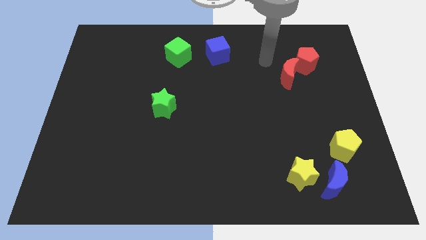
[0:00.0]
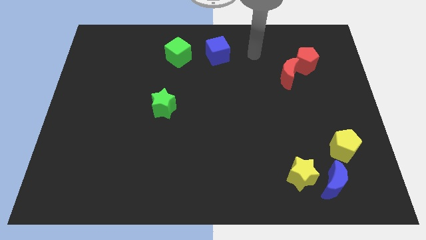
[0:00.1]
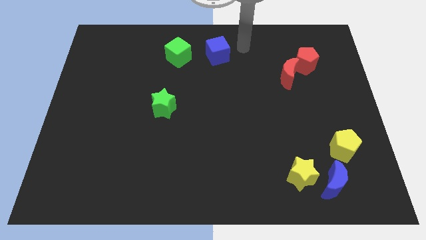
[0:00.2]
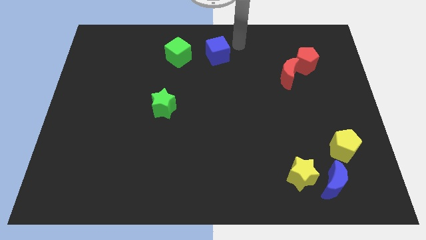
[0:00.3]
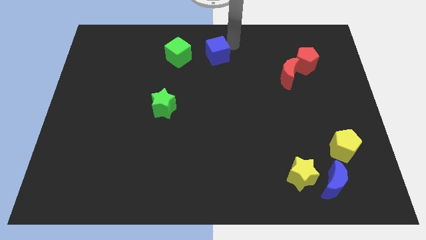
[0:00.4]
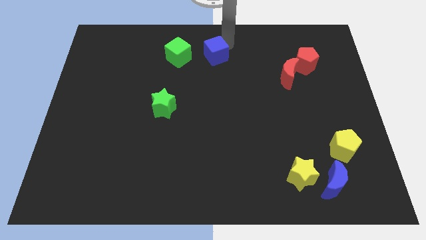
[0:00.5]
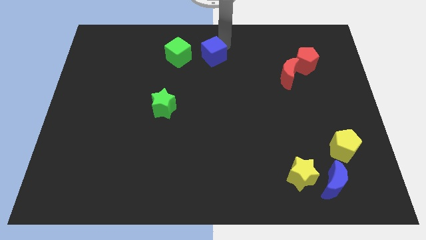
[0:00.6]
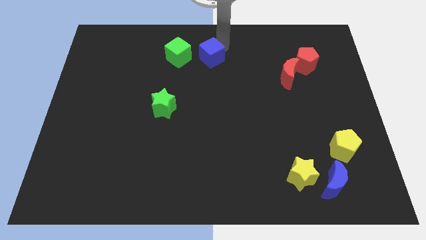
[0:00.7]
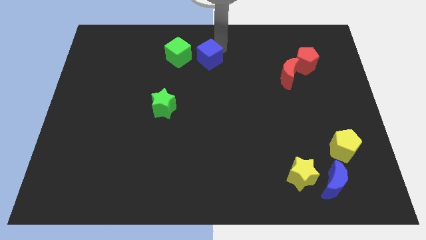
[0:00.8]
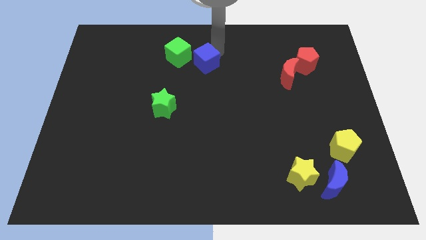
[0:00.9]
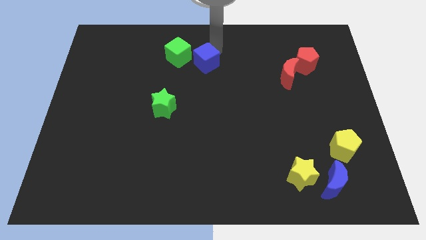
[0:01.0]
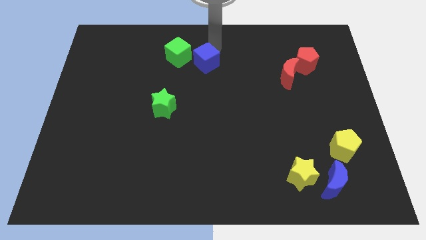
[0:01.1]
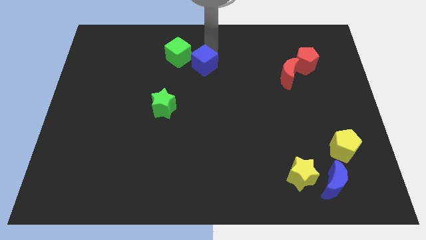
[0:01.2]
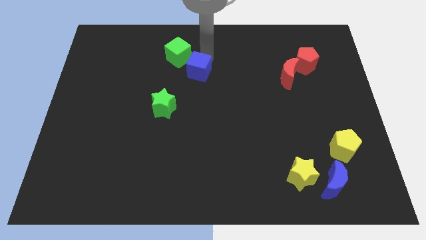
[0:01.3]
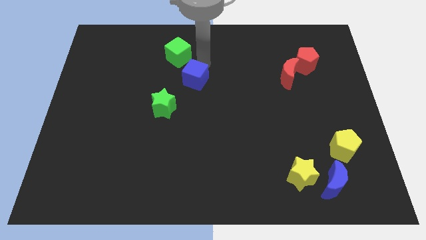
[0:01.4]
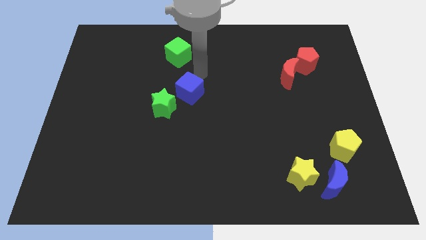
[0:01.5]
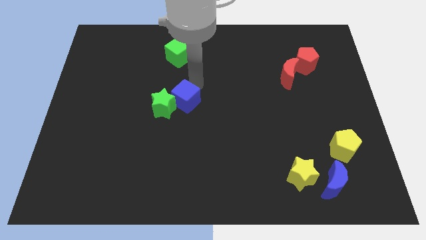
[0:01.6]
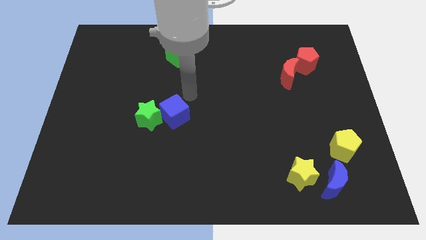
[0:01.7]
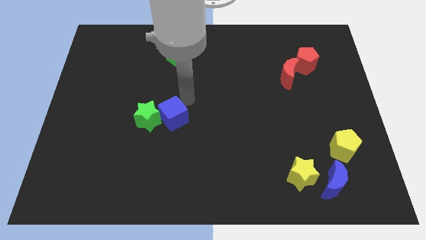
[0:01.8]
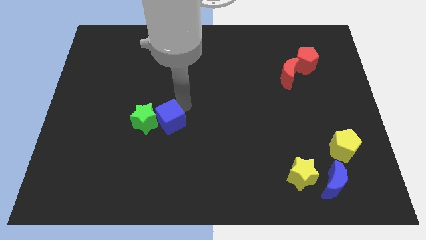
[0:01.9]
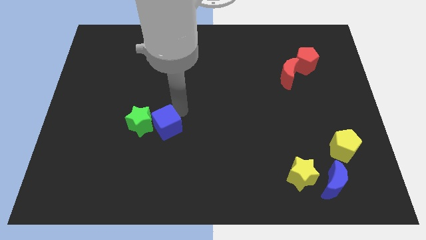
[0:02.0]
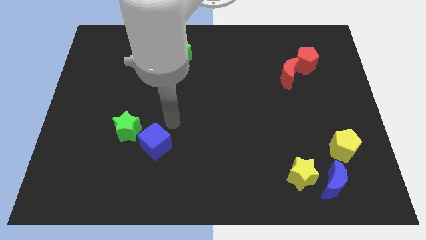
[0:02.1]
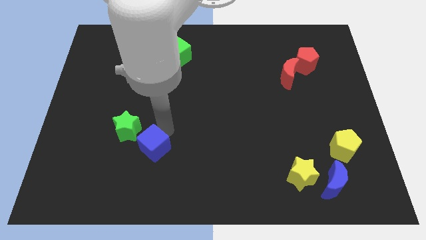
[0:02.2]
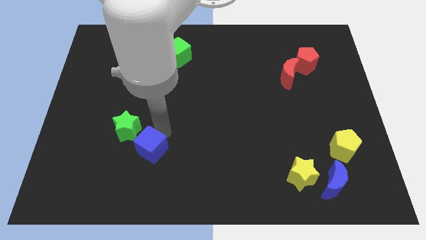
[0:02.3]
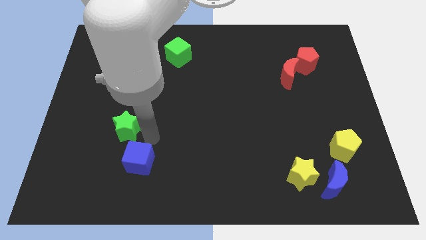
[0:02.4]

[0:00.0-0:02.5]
place the blue cube below right to the green star

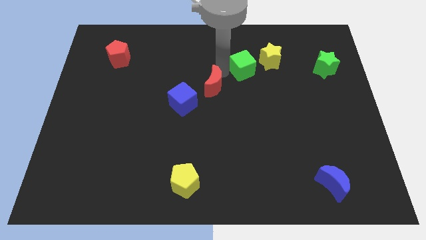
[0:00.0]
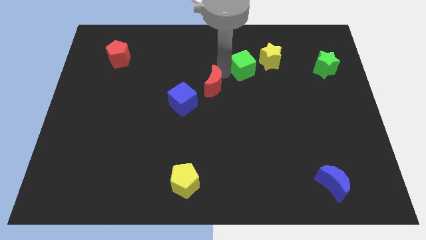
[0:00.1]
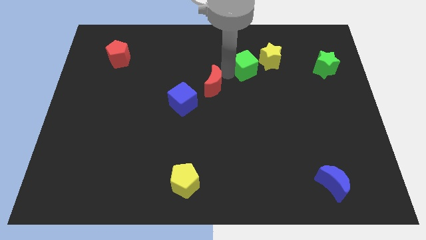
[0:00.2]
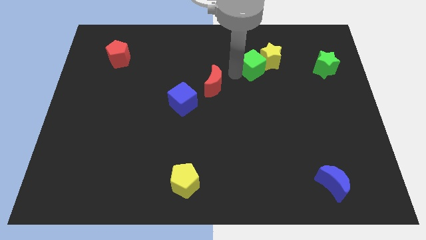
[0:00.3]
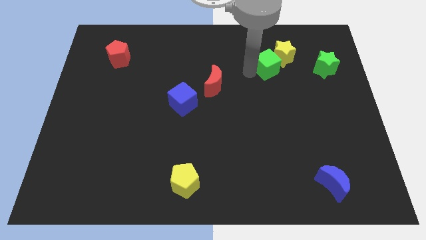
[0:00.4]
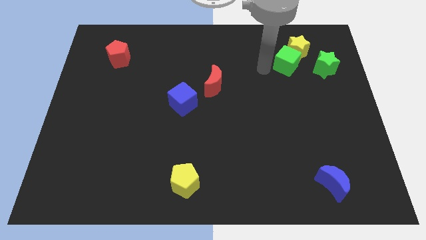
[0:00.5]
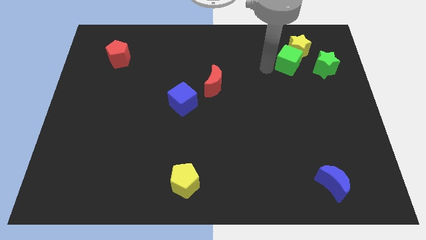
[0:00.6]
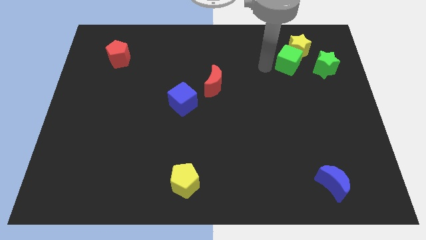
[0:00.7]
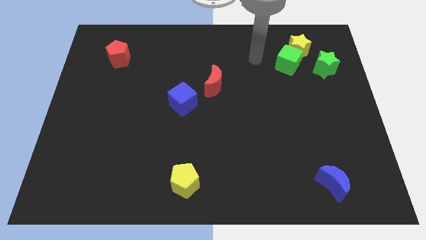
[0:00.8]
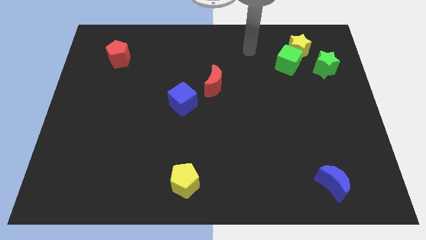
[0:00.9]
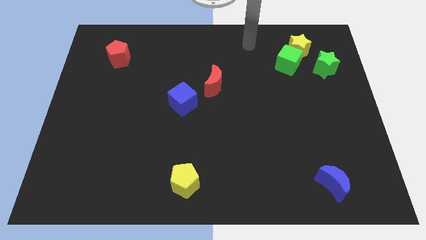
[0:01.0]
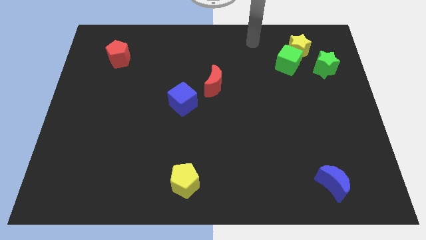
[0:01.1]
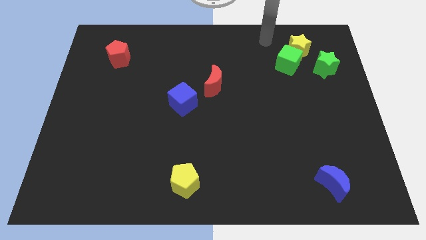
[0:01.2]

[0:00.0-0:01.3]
move the green cube along with the yellow star to the left side of the green star

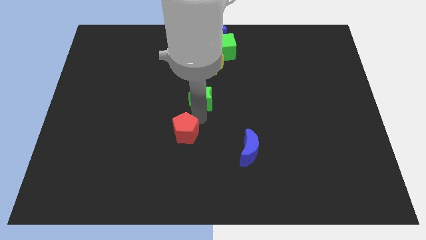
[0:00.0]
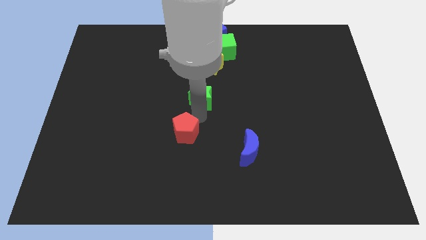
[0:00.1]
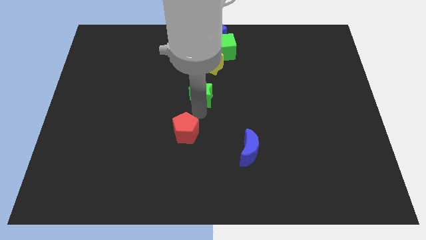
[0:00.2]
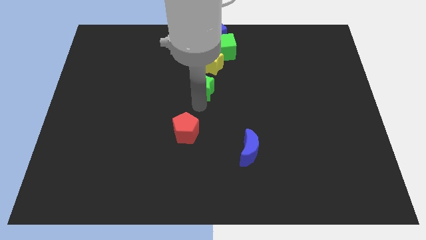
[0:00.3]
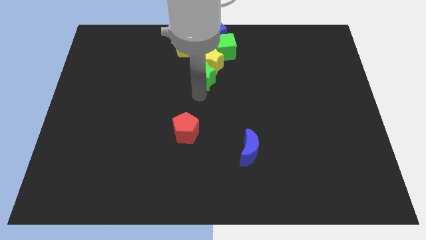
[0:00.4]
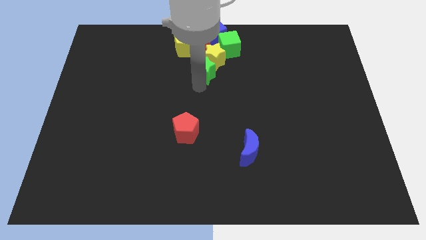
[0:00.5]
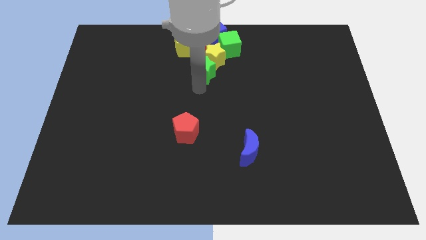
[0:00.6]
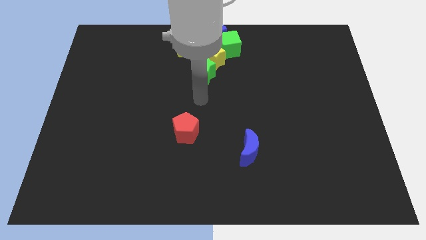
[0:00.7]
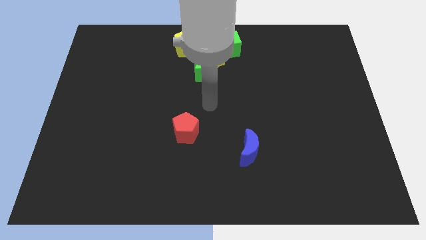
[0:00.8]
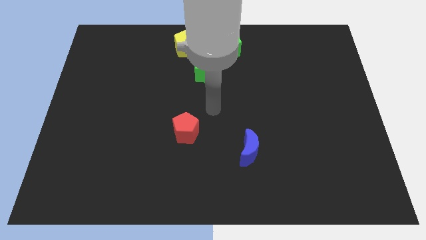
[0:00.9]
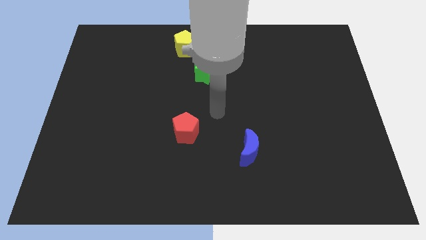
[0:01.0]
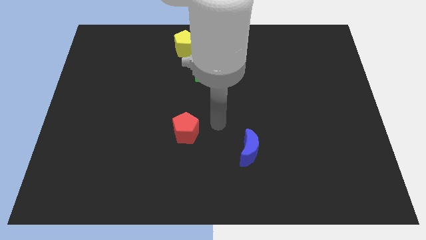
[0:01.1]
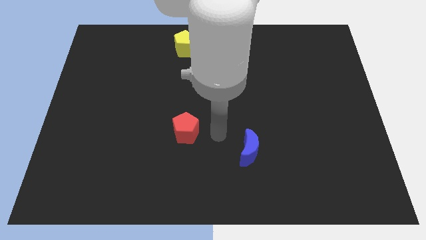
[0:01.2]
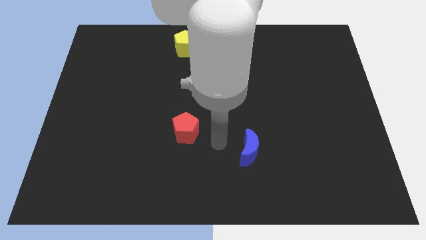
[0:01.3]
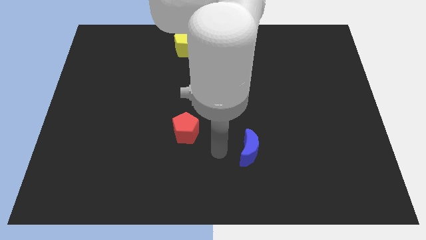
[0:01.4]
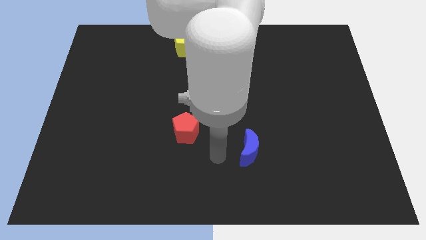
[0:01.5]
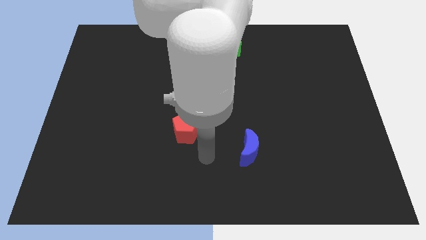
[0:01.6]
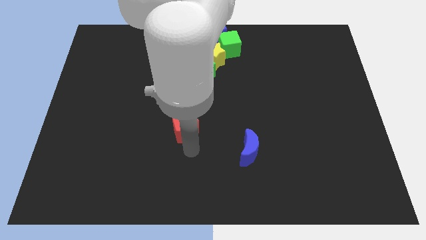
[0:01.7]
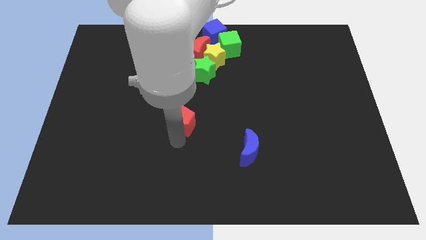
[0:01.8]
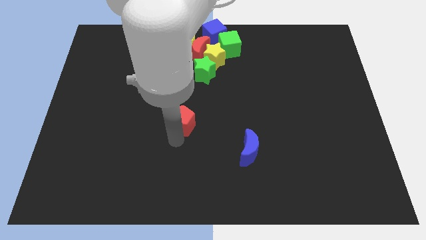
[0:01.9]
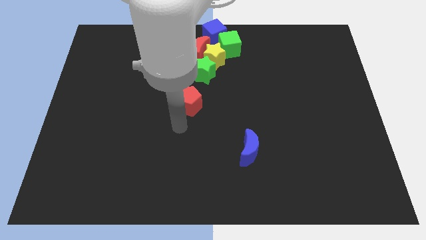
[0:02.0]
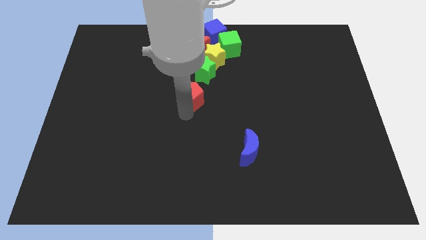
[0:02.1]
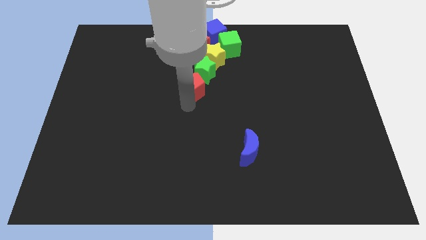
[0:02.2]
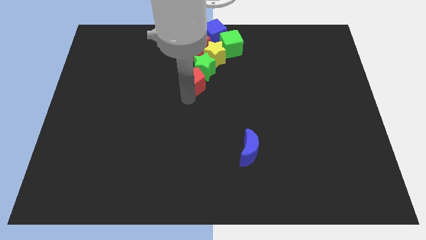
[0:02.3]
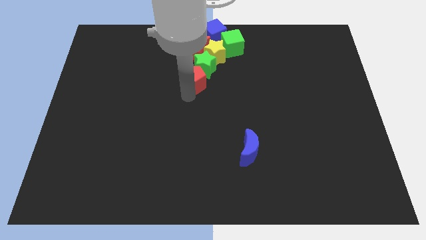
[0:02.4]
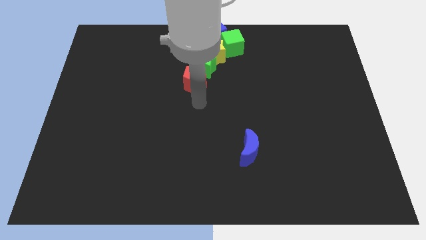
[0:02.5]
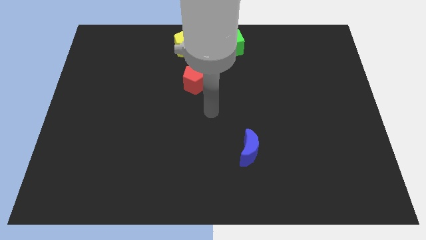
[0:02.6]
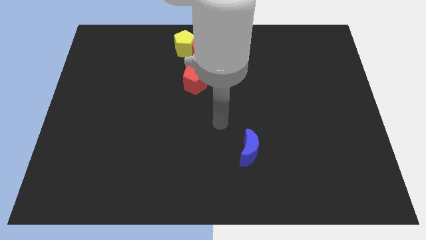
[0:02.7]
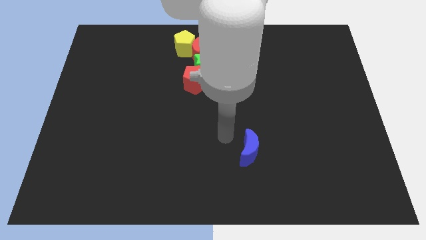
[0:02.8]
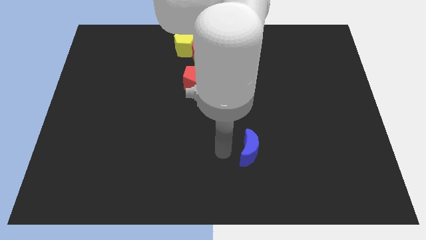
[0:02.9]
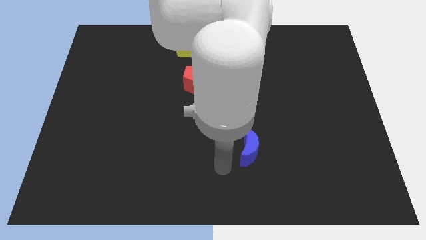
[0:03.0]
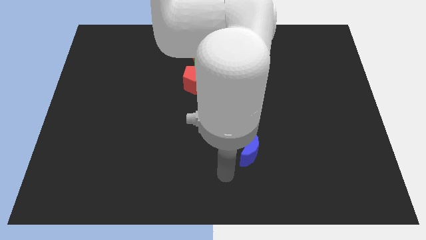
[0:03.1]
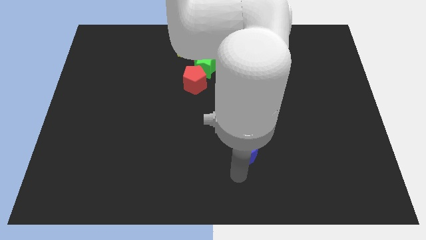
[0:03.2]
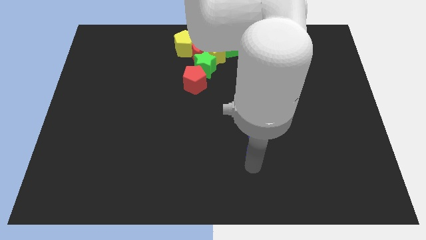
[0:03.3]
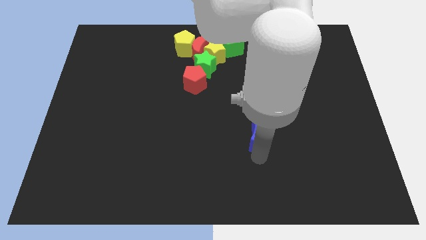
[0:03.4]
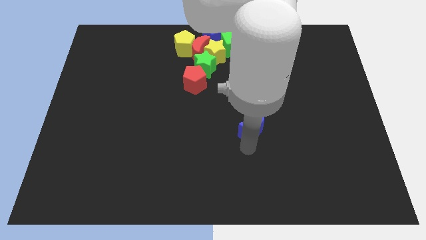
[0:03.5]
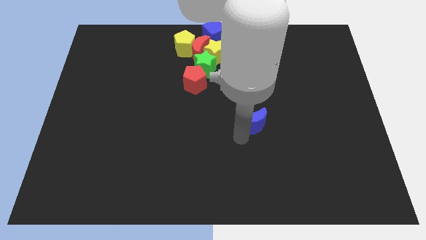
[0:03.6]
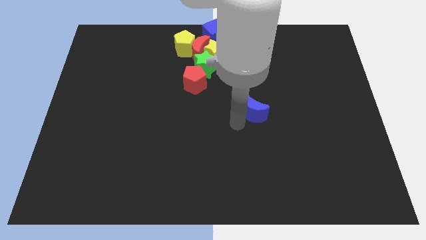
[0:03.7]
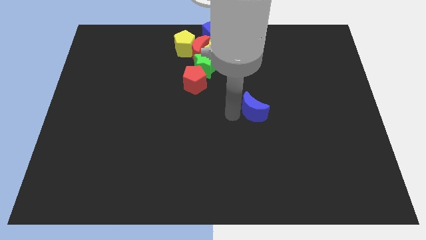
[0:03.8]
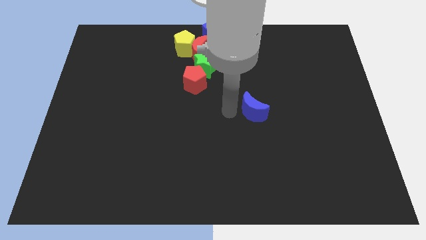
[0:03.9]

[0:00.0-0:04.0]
move red pentagon close to green star

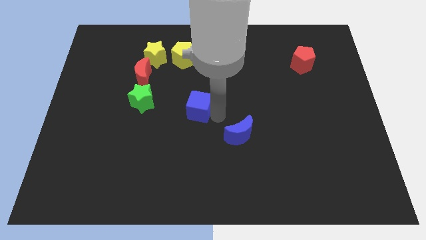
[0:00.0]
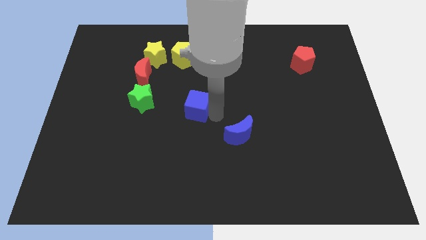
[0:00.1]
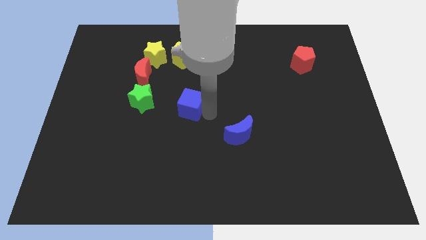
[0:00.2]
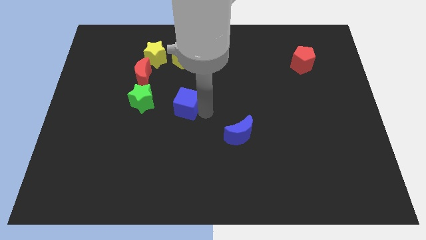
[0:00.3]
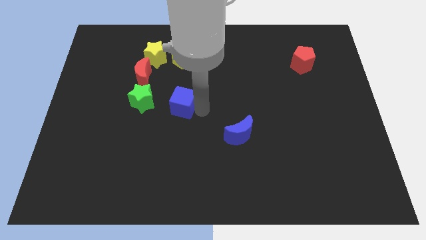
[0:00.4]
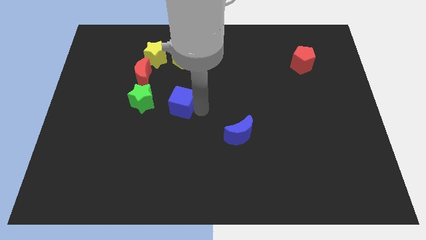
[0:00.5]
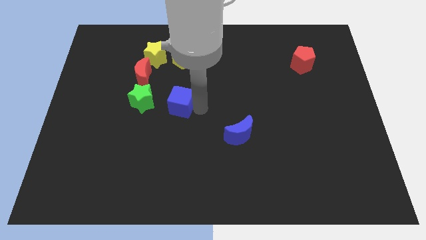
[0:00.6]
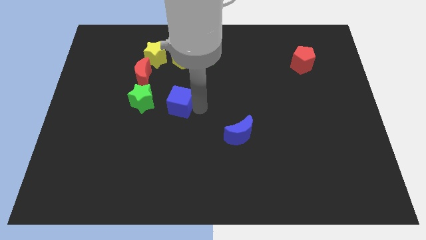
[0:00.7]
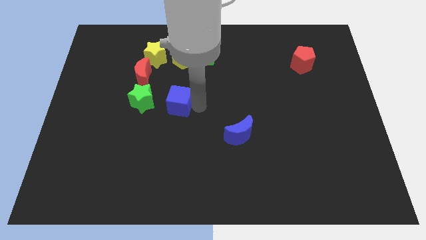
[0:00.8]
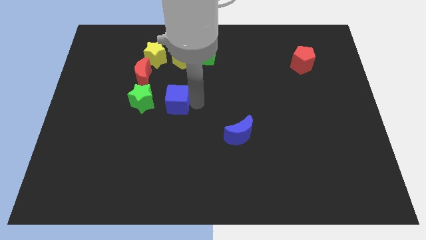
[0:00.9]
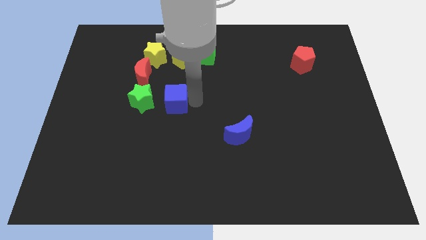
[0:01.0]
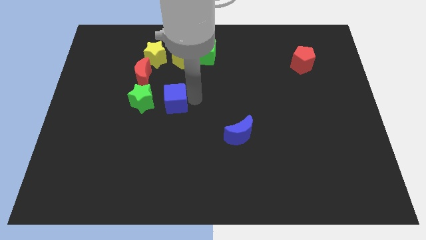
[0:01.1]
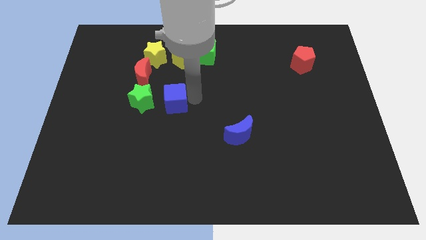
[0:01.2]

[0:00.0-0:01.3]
move blue cube towards green star
